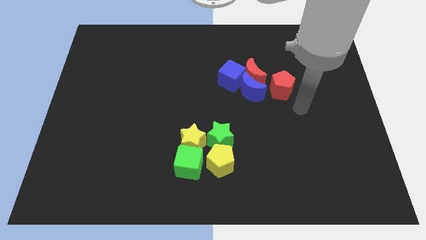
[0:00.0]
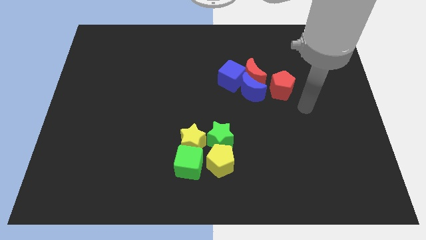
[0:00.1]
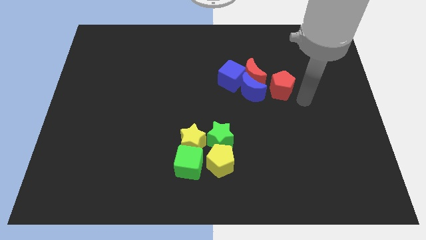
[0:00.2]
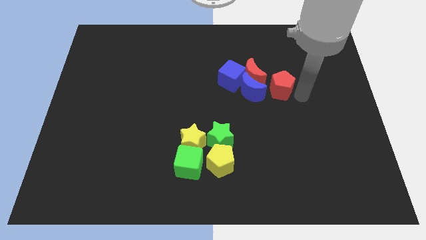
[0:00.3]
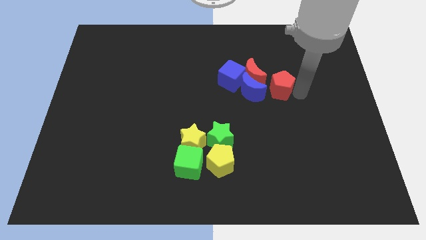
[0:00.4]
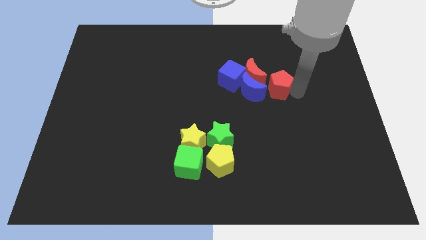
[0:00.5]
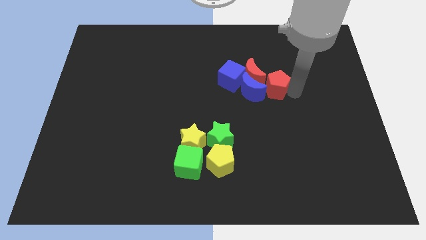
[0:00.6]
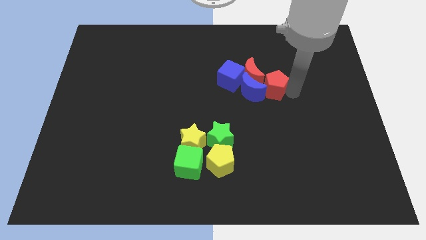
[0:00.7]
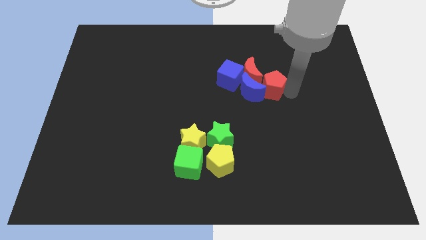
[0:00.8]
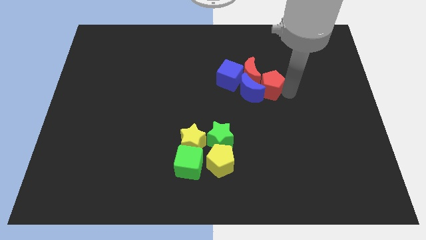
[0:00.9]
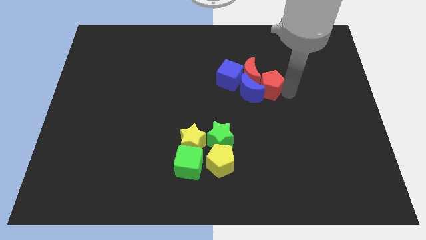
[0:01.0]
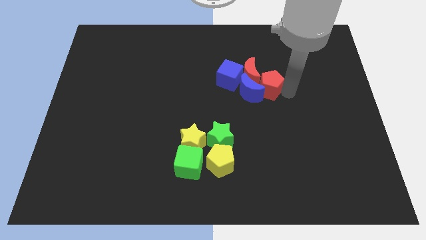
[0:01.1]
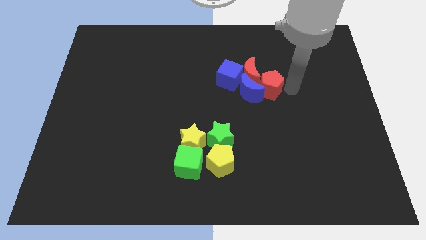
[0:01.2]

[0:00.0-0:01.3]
push the red pentagon into the blue crescent from the right

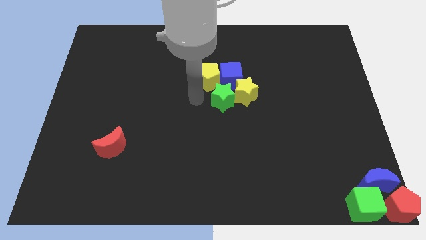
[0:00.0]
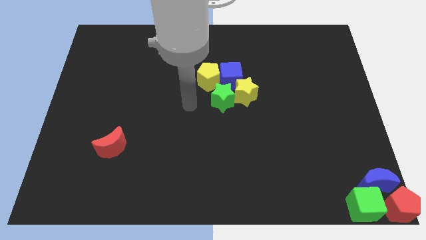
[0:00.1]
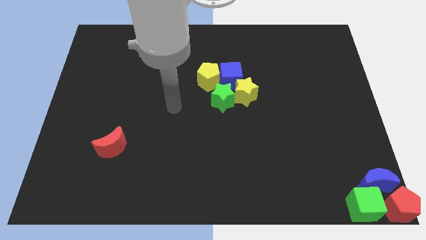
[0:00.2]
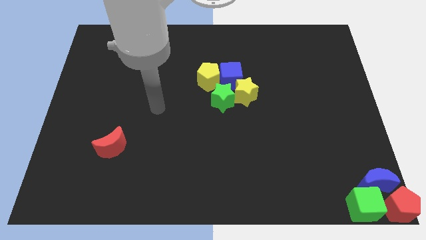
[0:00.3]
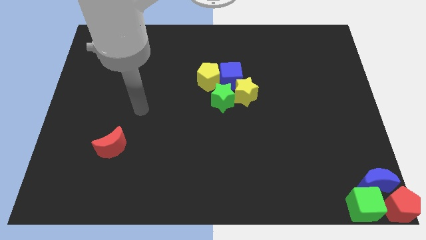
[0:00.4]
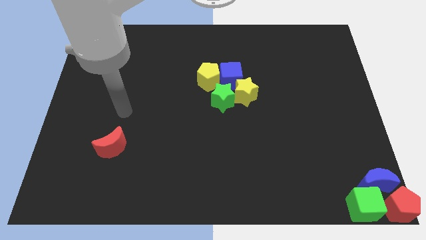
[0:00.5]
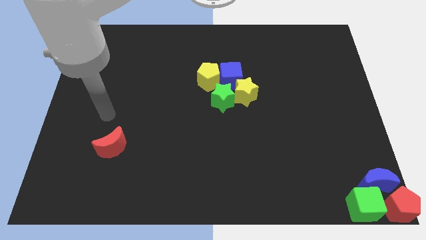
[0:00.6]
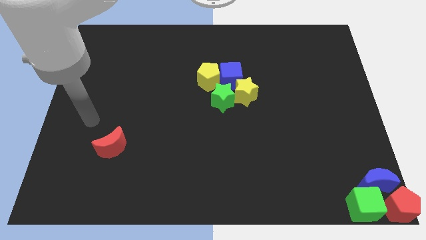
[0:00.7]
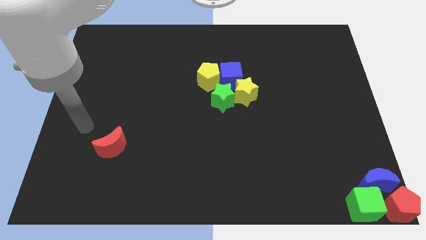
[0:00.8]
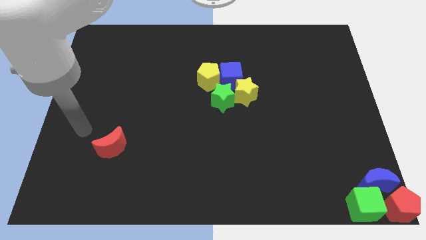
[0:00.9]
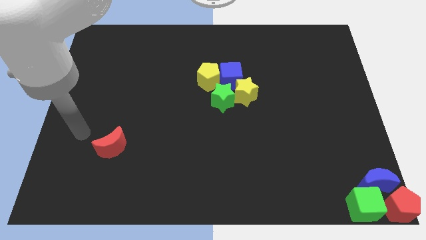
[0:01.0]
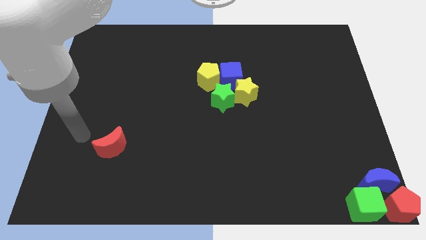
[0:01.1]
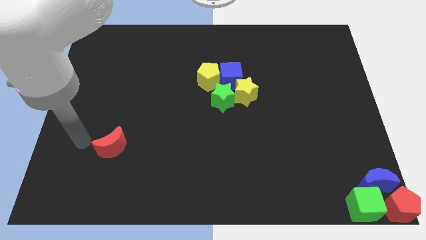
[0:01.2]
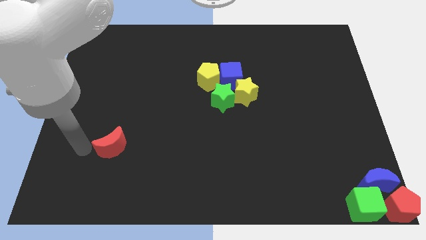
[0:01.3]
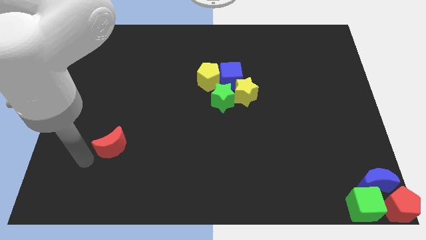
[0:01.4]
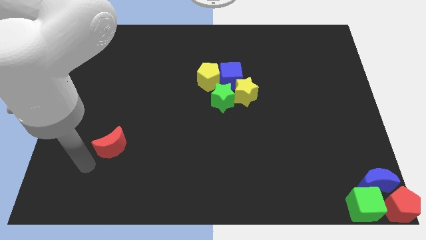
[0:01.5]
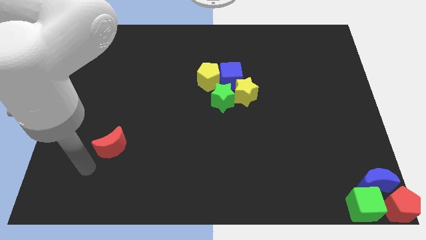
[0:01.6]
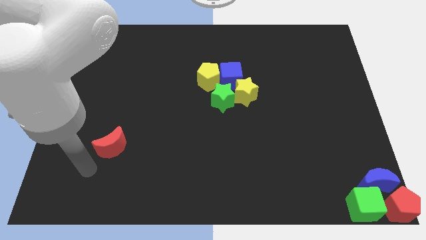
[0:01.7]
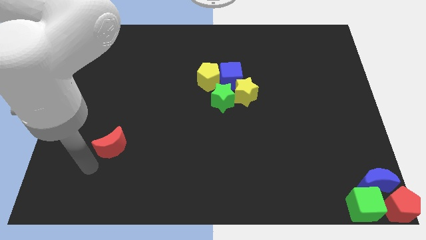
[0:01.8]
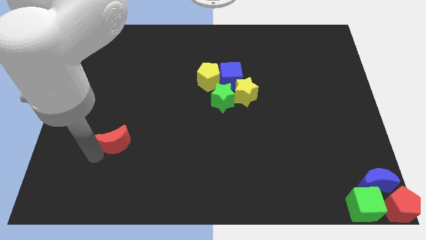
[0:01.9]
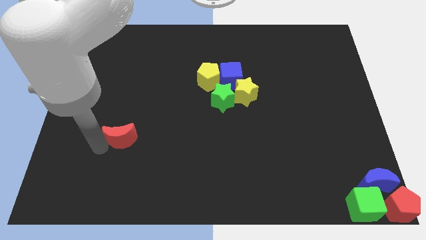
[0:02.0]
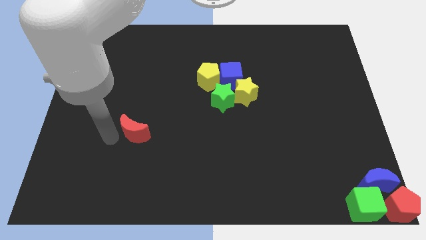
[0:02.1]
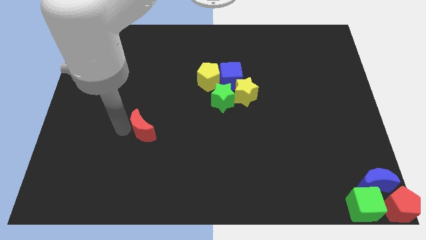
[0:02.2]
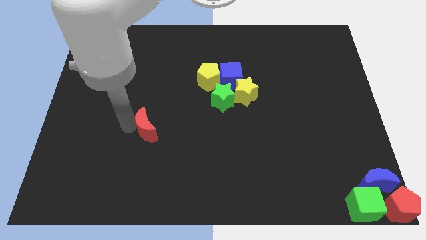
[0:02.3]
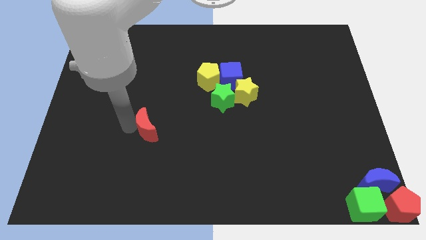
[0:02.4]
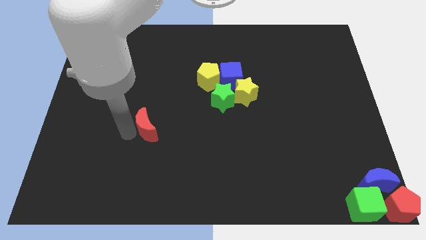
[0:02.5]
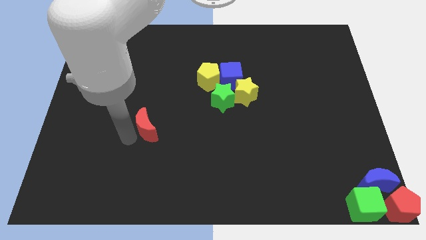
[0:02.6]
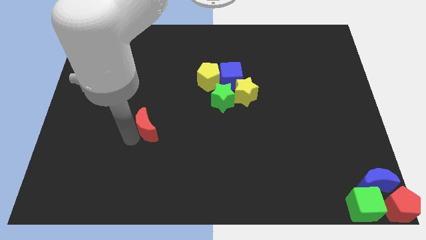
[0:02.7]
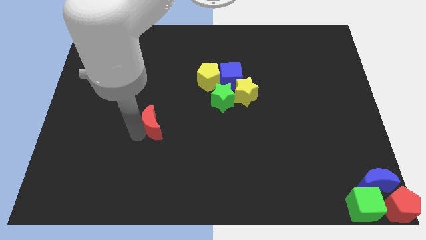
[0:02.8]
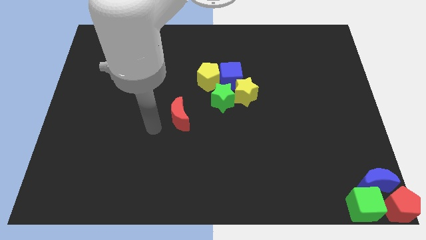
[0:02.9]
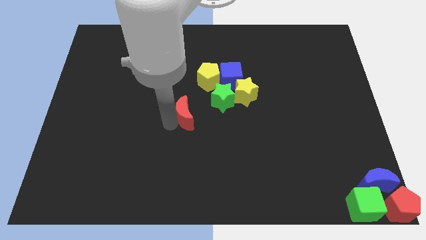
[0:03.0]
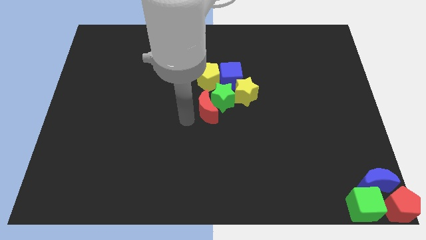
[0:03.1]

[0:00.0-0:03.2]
move red moon towards green star

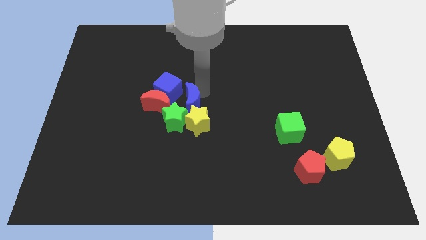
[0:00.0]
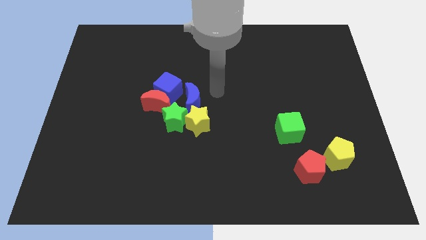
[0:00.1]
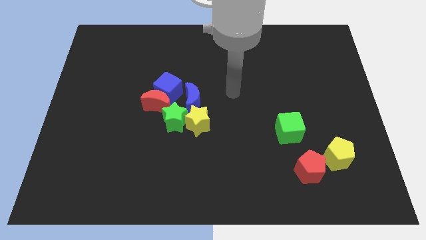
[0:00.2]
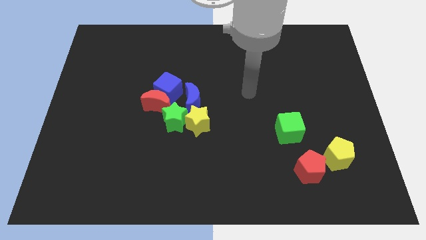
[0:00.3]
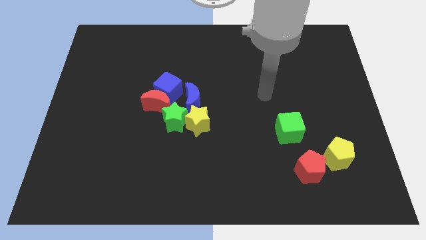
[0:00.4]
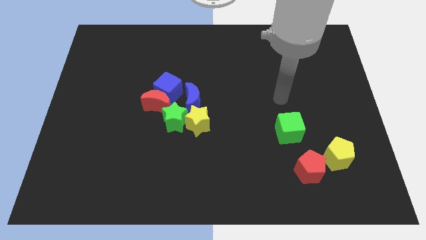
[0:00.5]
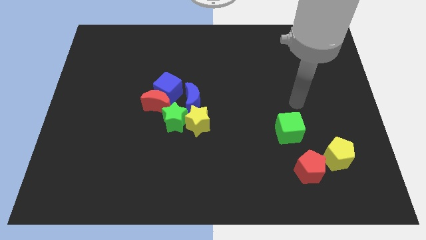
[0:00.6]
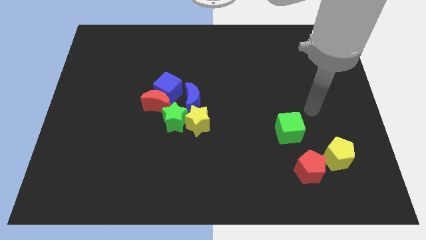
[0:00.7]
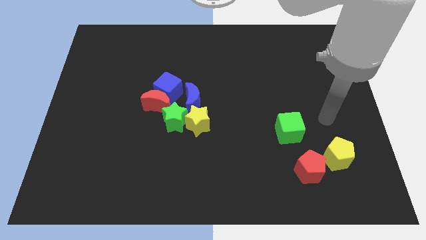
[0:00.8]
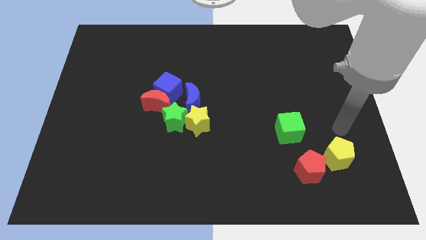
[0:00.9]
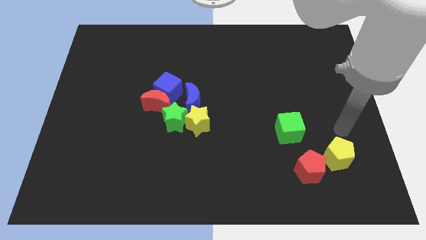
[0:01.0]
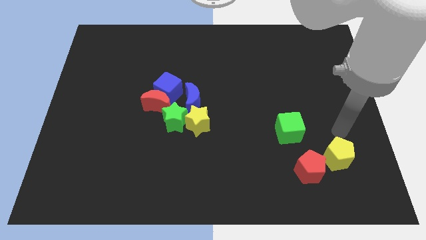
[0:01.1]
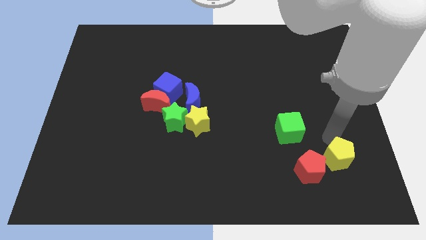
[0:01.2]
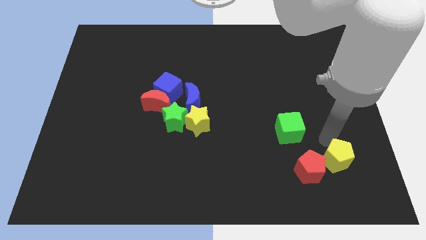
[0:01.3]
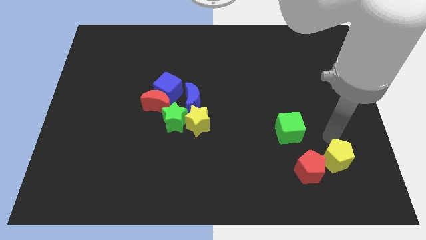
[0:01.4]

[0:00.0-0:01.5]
tap the top side of the yellow pentagon

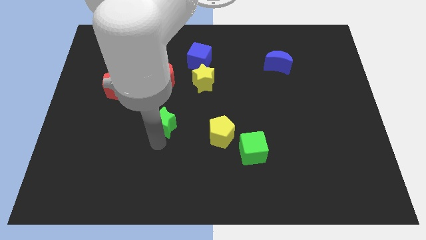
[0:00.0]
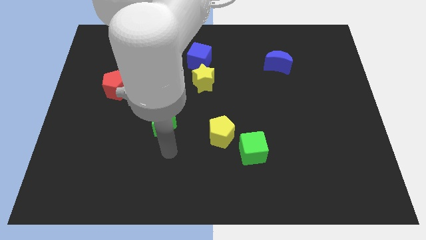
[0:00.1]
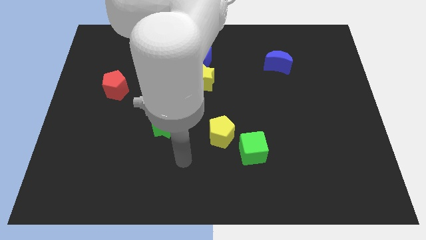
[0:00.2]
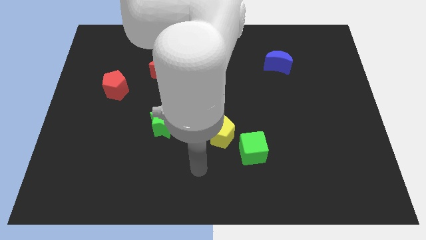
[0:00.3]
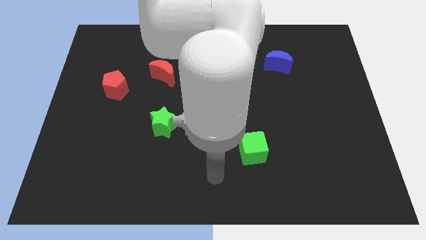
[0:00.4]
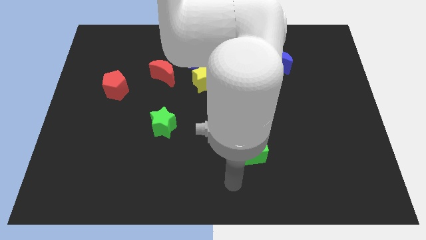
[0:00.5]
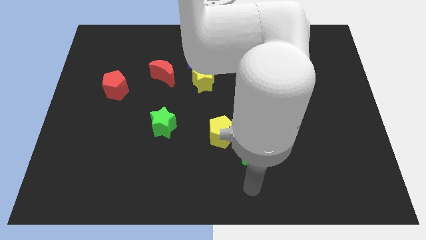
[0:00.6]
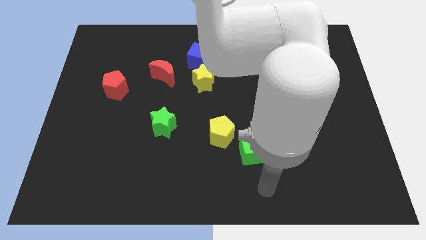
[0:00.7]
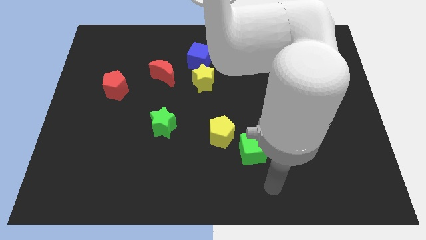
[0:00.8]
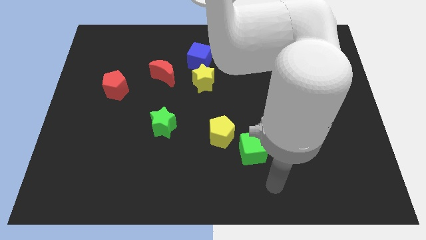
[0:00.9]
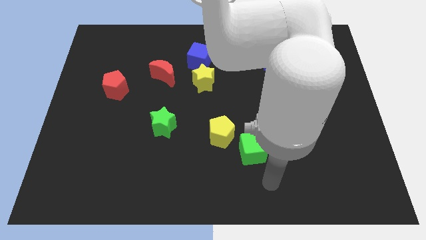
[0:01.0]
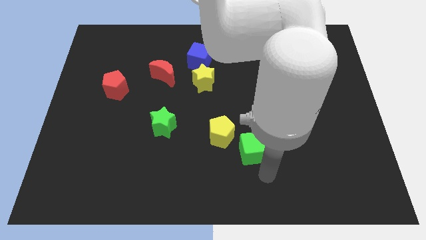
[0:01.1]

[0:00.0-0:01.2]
move your arm away from green star

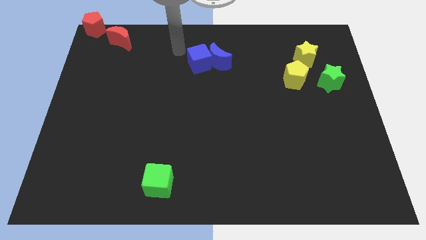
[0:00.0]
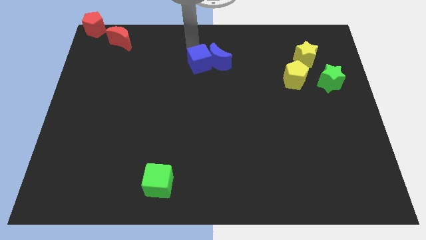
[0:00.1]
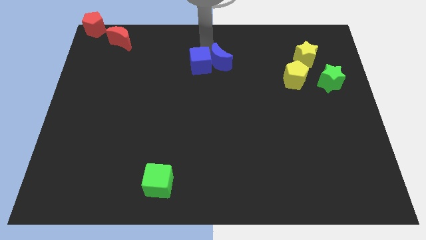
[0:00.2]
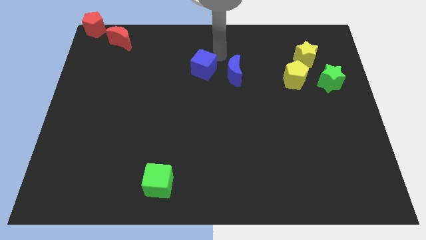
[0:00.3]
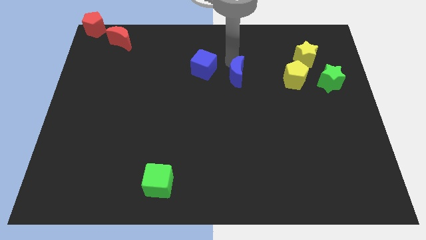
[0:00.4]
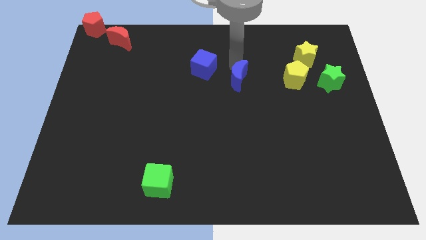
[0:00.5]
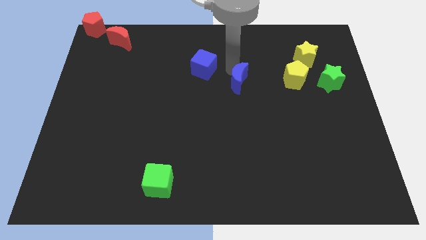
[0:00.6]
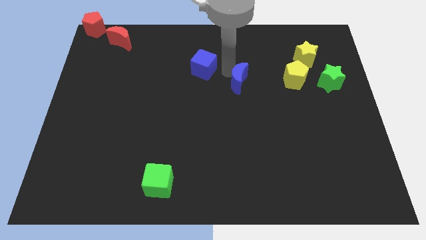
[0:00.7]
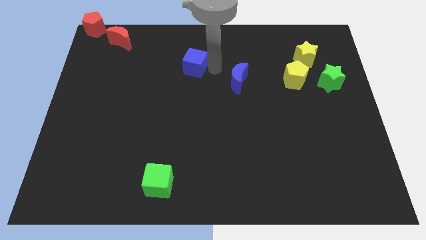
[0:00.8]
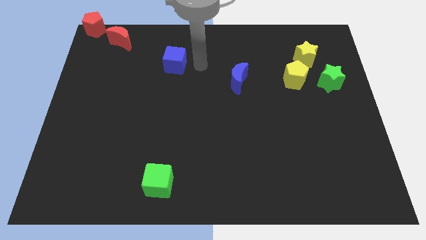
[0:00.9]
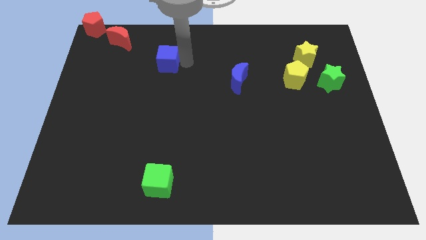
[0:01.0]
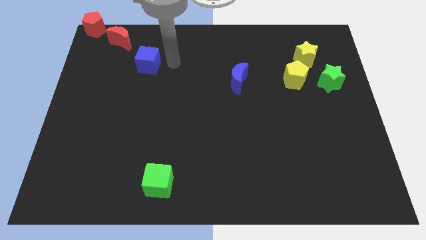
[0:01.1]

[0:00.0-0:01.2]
separate blue blocks from each other

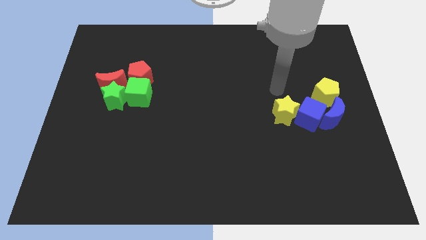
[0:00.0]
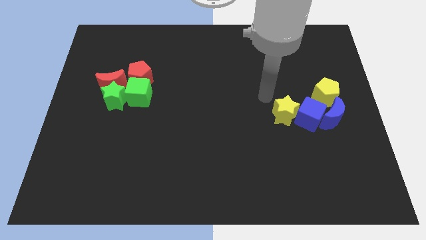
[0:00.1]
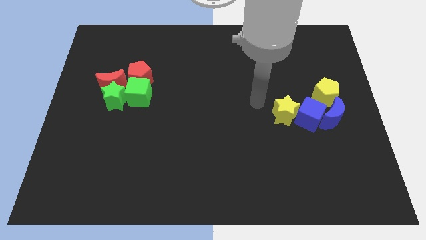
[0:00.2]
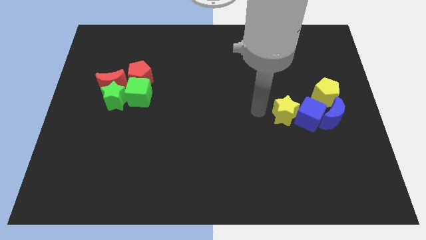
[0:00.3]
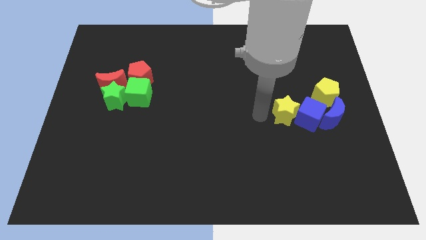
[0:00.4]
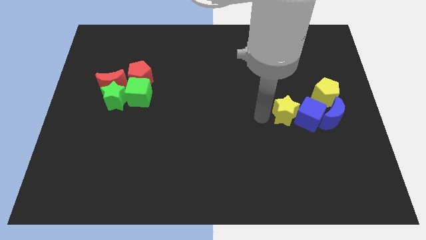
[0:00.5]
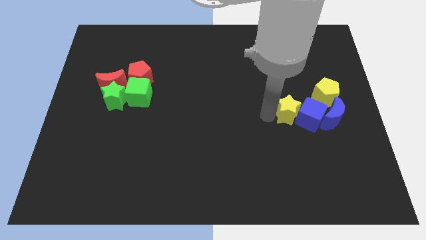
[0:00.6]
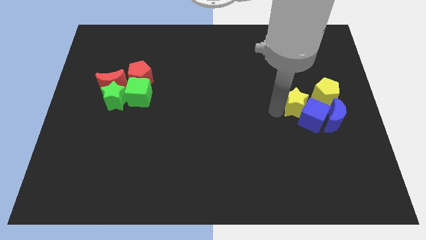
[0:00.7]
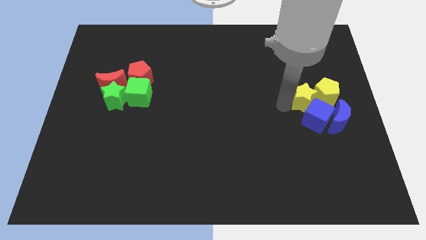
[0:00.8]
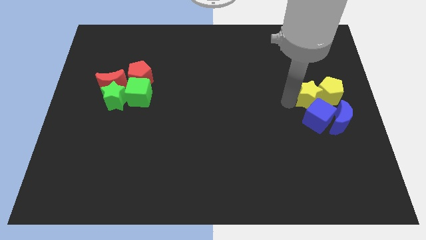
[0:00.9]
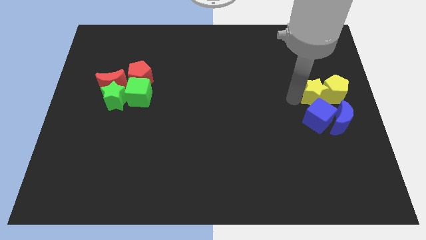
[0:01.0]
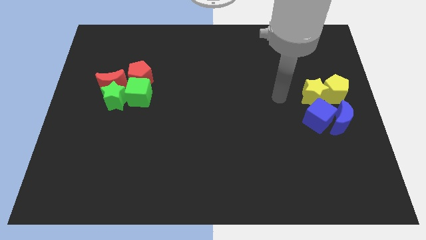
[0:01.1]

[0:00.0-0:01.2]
move the yellow star into the left of yellow pentagon
